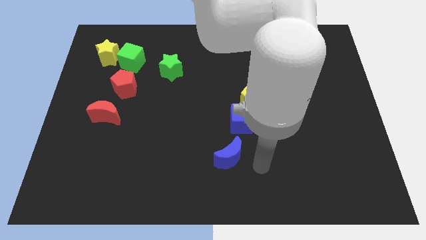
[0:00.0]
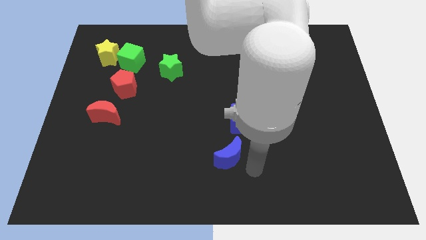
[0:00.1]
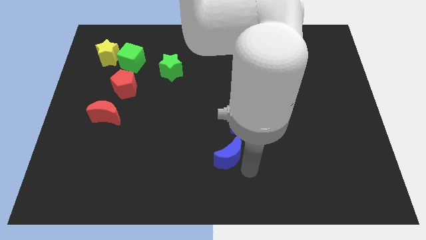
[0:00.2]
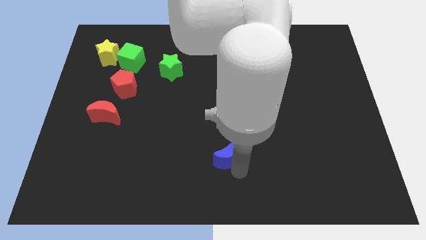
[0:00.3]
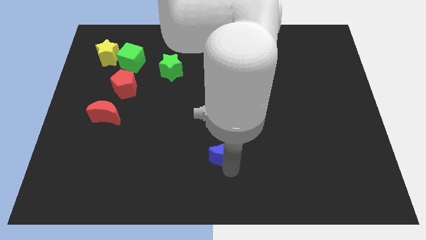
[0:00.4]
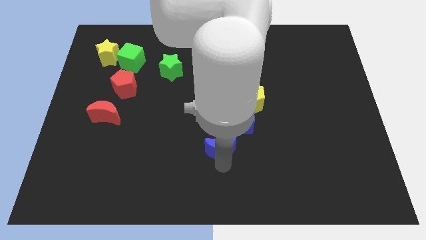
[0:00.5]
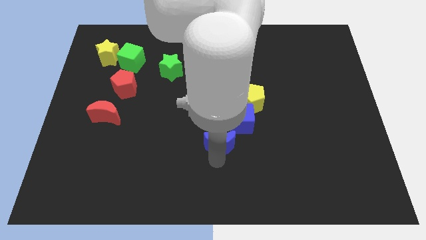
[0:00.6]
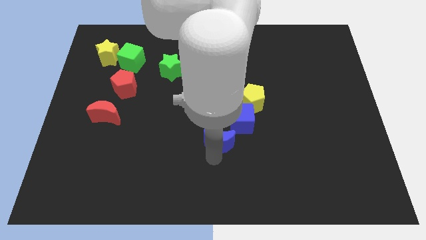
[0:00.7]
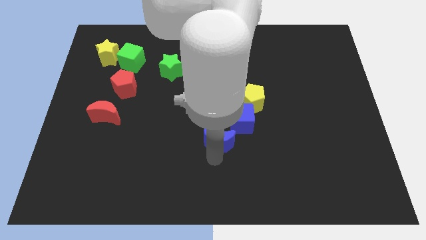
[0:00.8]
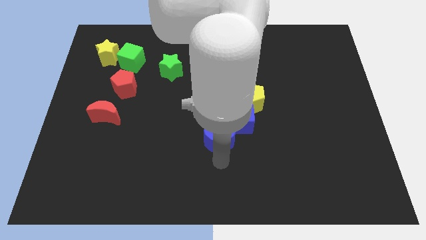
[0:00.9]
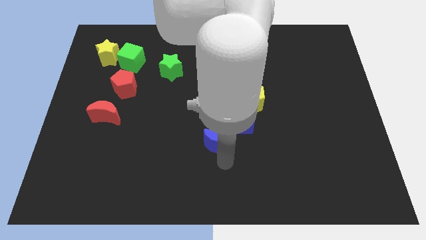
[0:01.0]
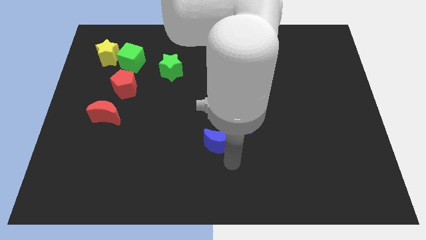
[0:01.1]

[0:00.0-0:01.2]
move the blue crescent slightly to the bottom left of the blue cube

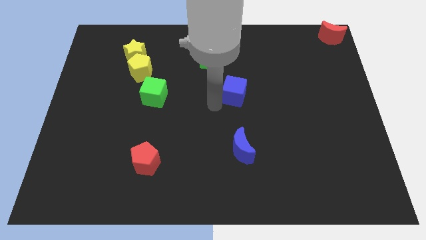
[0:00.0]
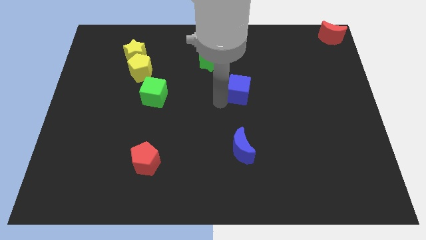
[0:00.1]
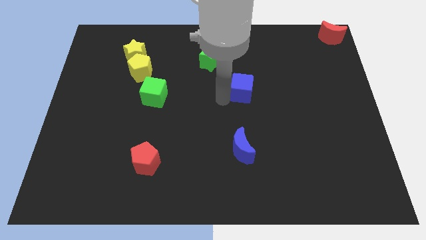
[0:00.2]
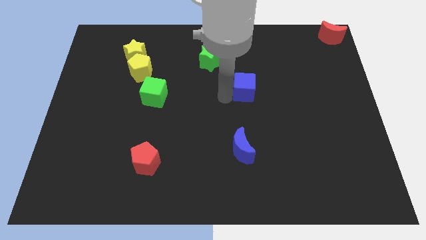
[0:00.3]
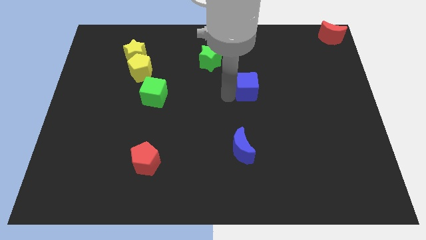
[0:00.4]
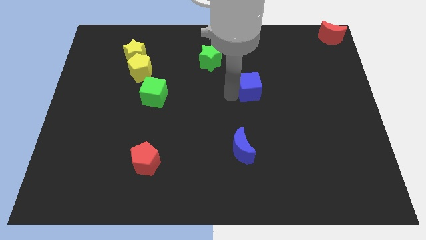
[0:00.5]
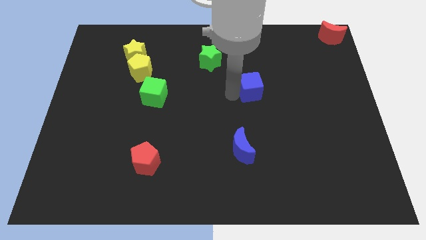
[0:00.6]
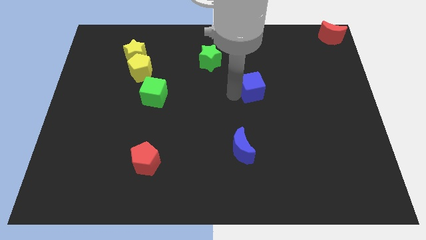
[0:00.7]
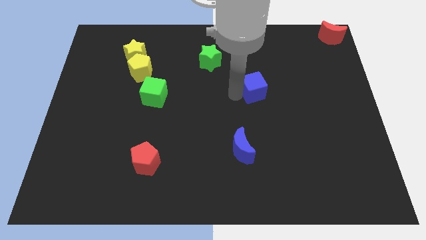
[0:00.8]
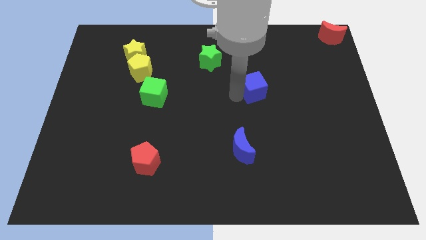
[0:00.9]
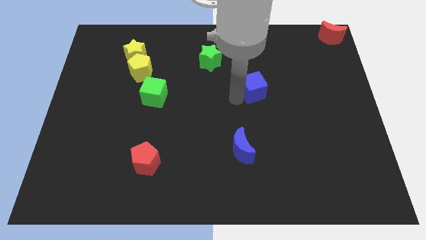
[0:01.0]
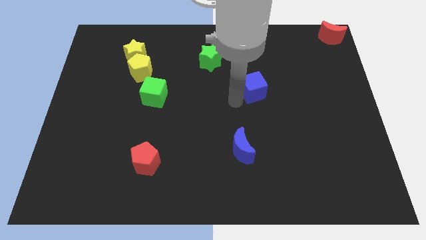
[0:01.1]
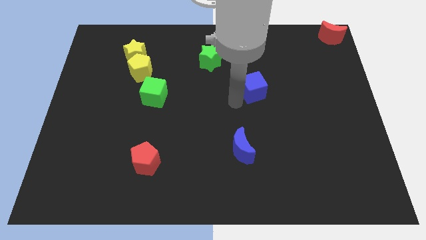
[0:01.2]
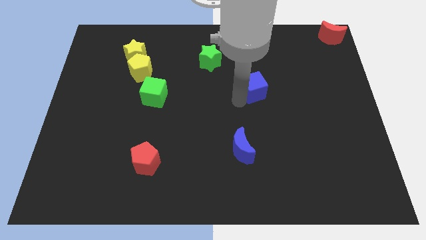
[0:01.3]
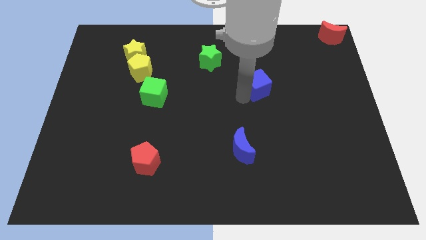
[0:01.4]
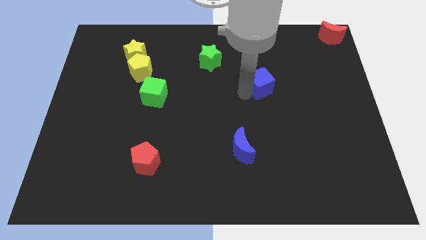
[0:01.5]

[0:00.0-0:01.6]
push the blue cube slightly towards the right side

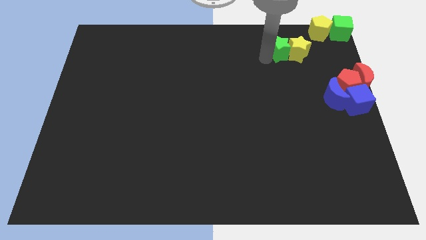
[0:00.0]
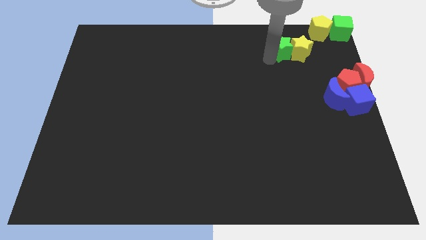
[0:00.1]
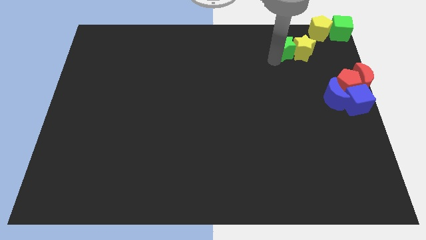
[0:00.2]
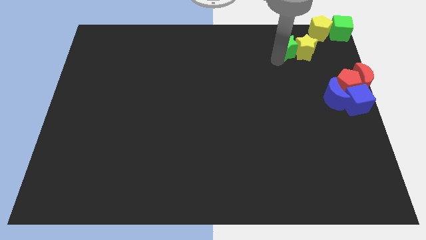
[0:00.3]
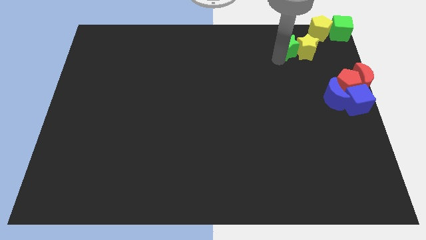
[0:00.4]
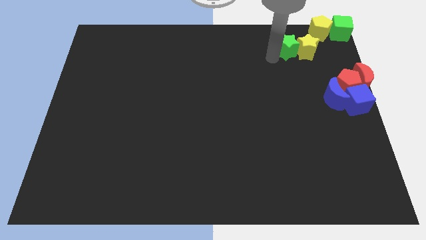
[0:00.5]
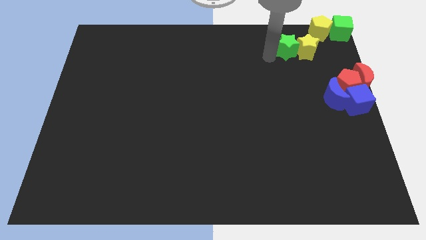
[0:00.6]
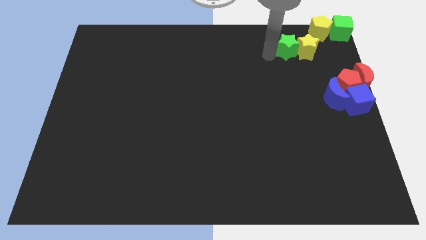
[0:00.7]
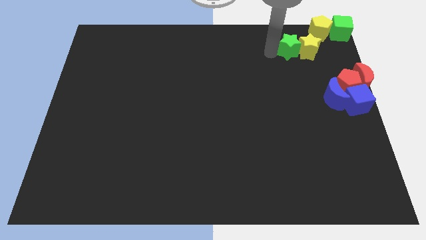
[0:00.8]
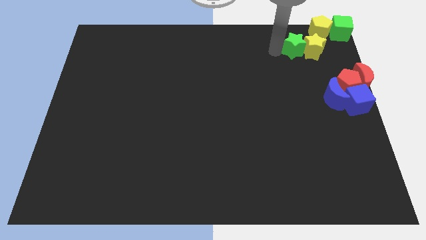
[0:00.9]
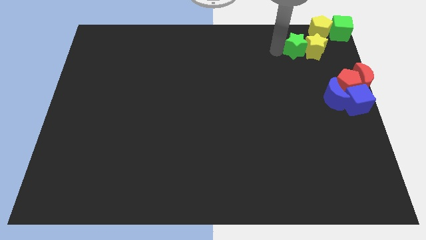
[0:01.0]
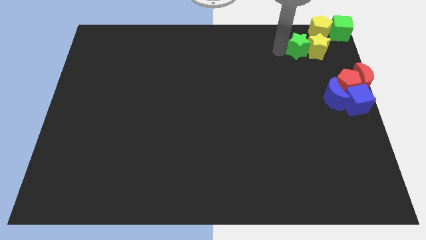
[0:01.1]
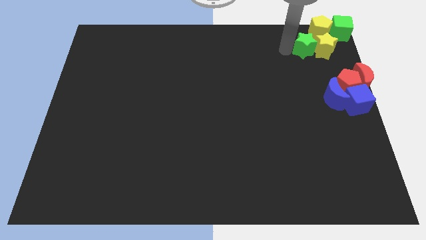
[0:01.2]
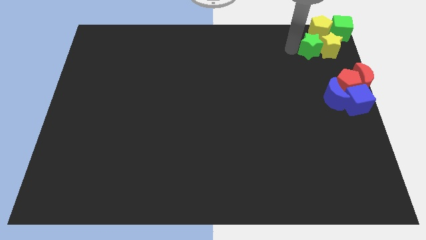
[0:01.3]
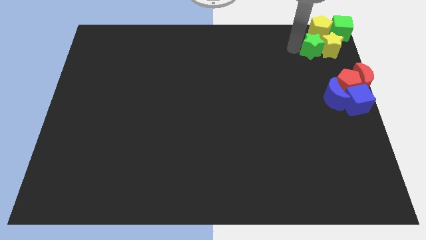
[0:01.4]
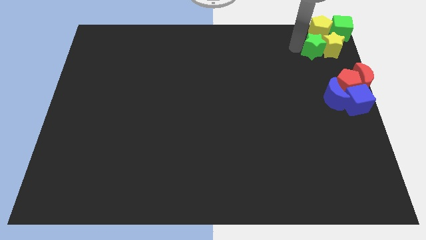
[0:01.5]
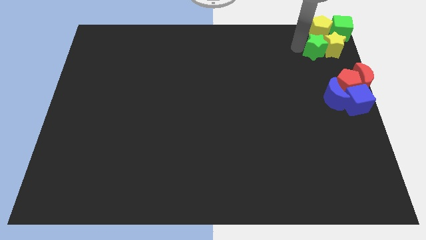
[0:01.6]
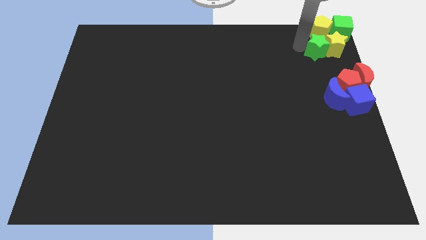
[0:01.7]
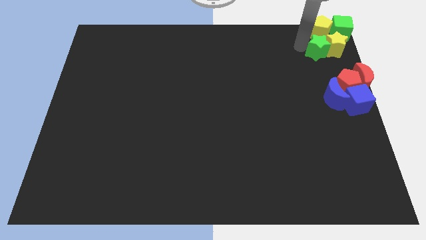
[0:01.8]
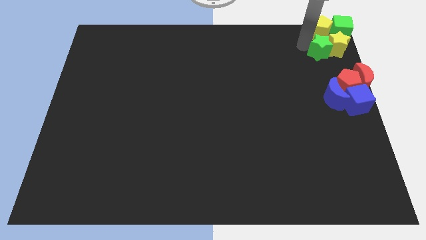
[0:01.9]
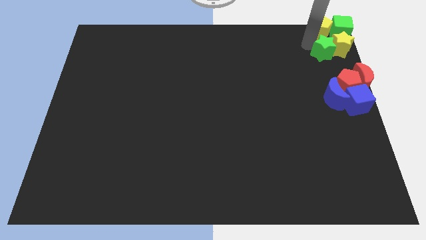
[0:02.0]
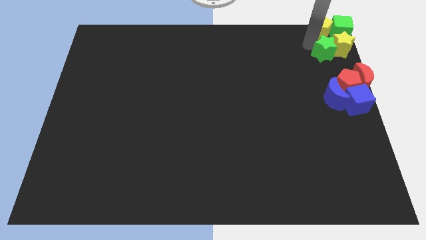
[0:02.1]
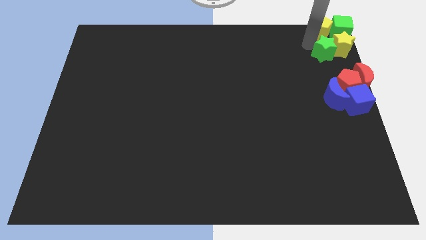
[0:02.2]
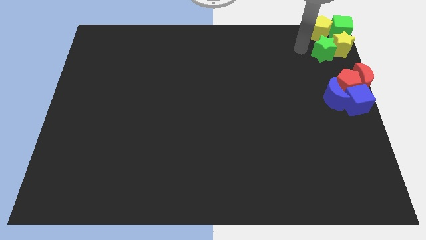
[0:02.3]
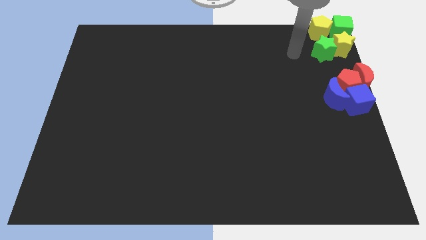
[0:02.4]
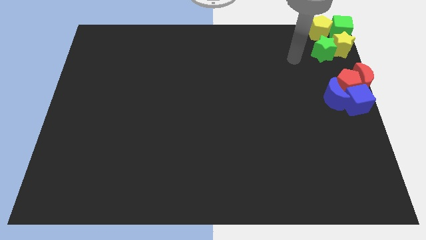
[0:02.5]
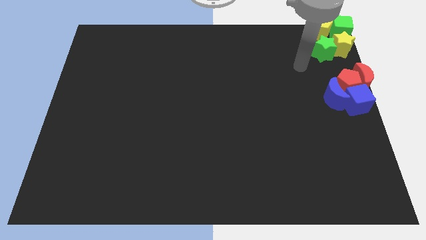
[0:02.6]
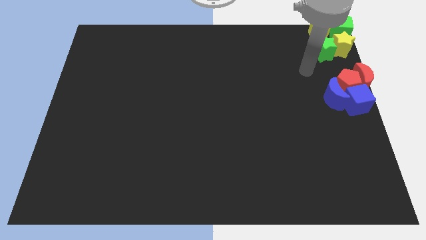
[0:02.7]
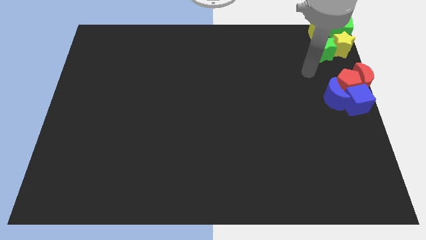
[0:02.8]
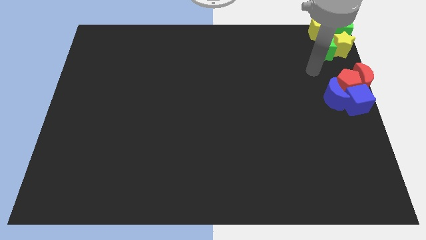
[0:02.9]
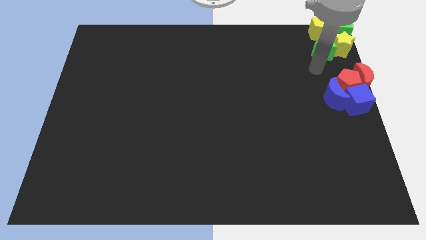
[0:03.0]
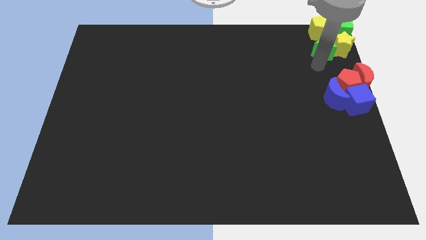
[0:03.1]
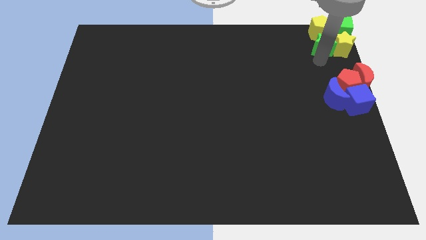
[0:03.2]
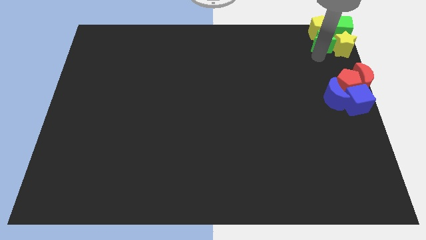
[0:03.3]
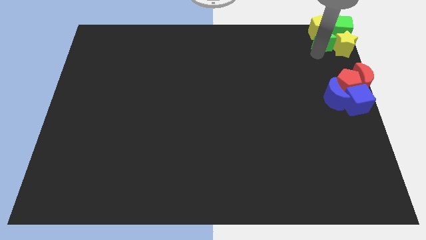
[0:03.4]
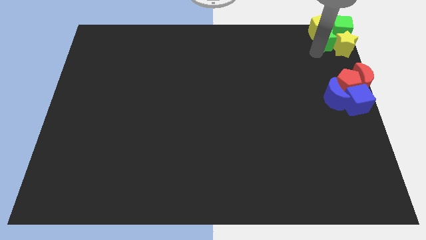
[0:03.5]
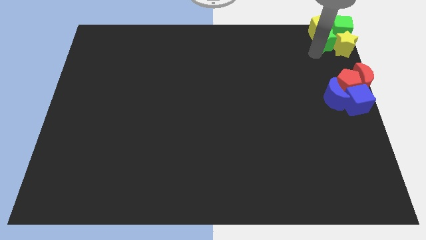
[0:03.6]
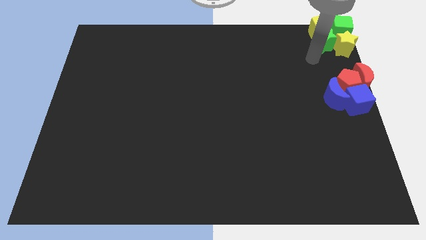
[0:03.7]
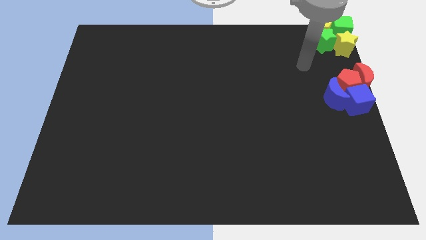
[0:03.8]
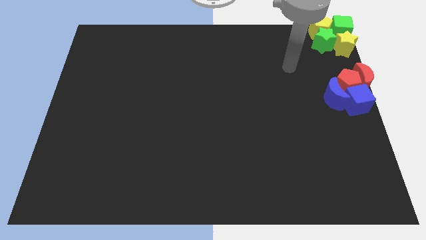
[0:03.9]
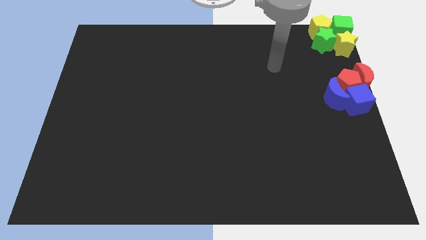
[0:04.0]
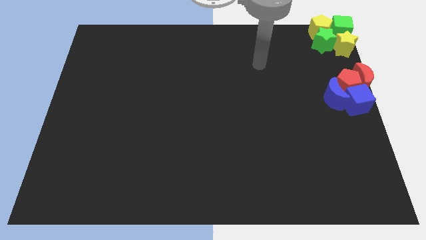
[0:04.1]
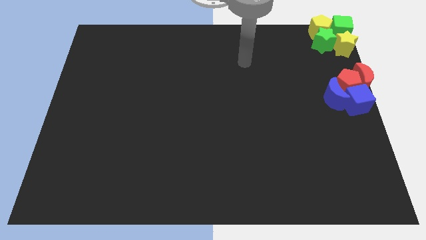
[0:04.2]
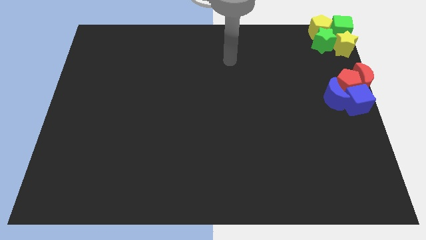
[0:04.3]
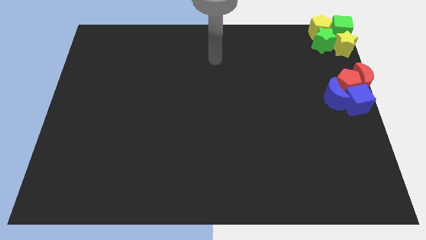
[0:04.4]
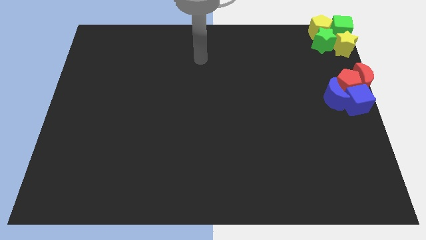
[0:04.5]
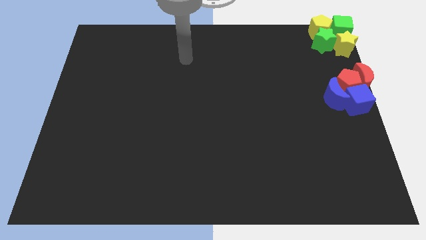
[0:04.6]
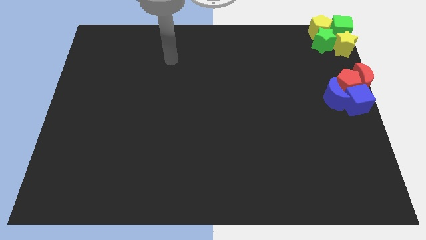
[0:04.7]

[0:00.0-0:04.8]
place the green and yellow star to the top right of the board

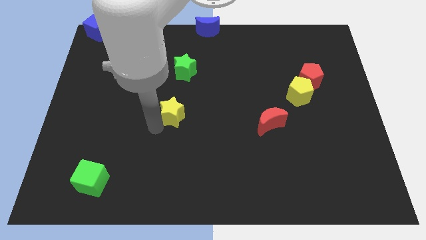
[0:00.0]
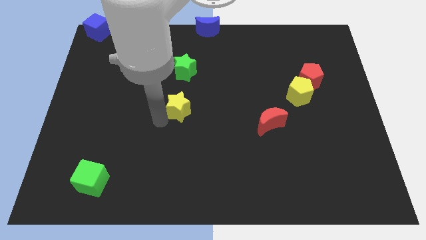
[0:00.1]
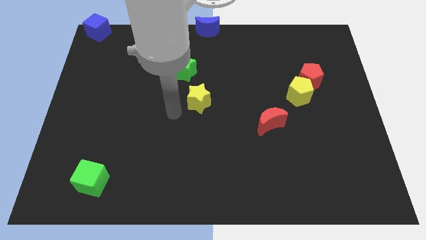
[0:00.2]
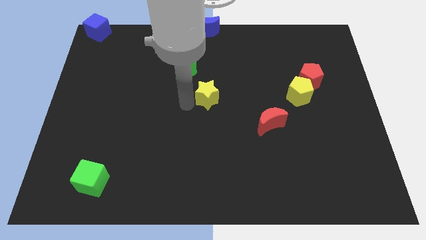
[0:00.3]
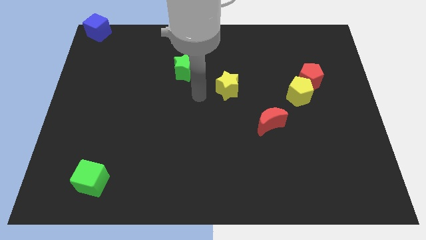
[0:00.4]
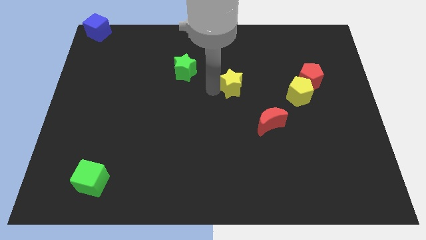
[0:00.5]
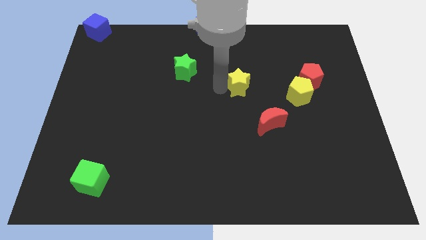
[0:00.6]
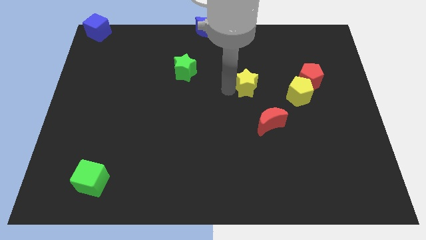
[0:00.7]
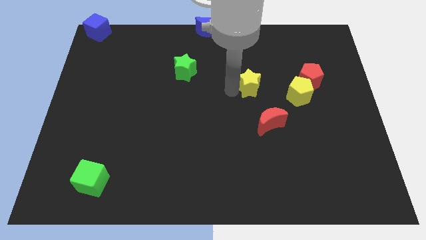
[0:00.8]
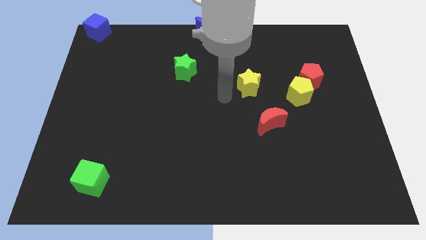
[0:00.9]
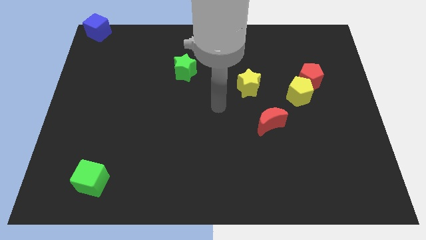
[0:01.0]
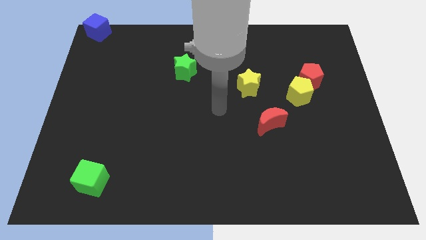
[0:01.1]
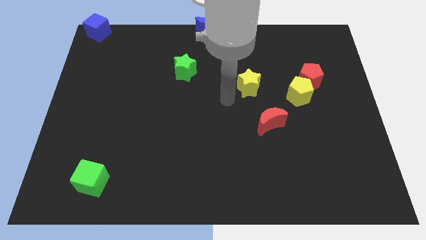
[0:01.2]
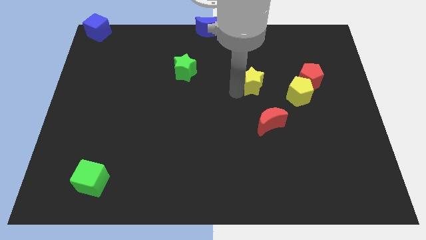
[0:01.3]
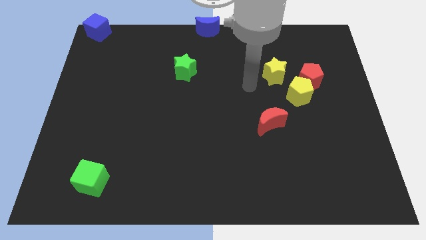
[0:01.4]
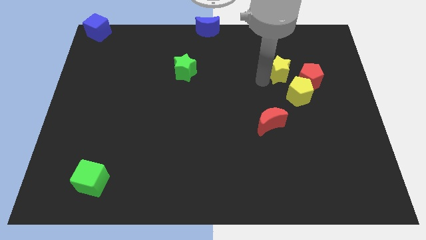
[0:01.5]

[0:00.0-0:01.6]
place the yellow star above the yellow pentagon
